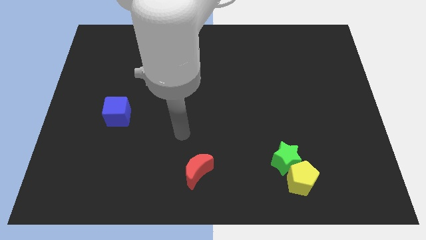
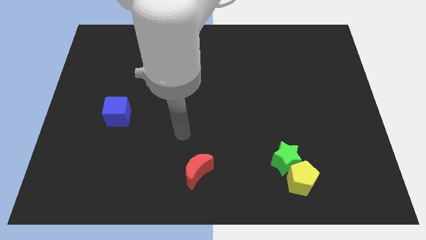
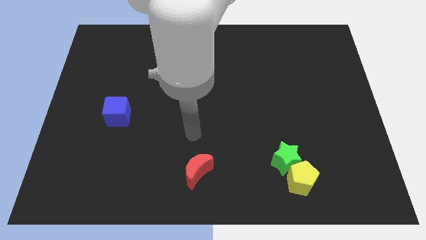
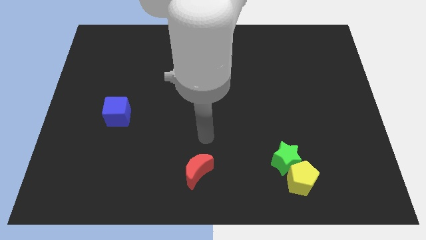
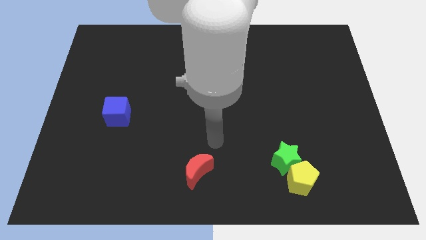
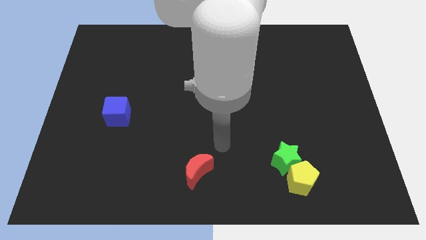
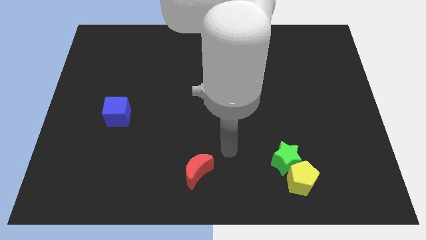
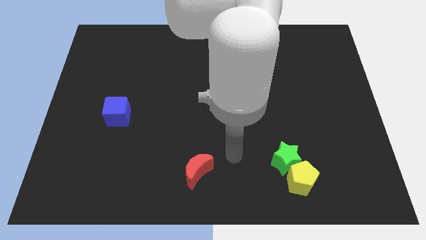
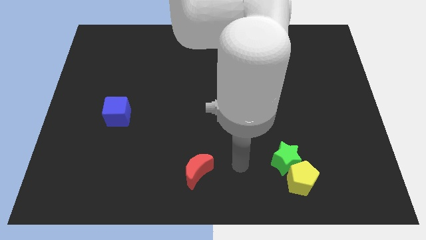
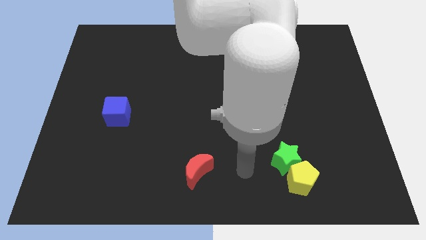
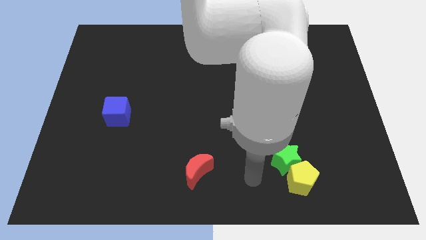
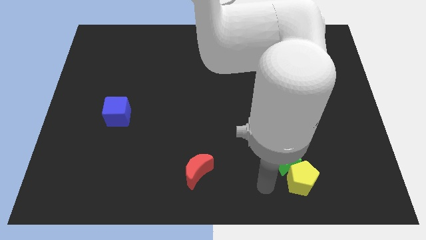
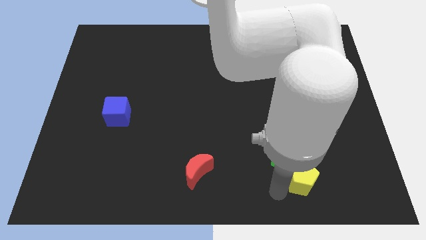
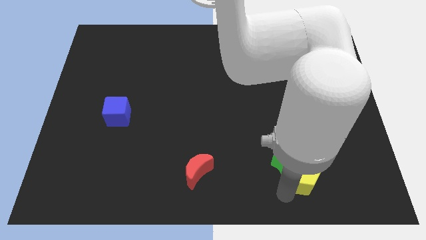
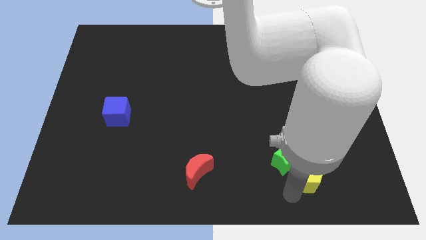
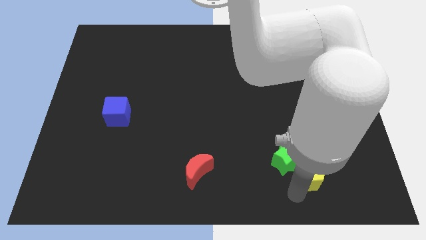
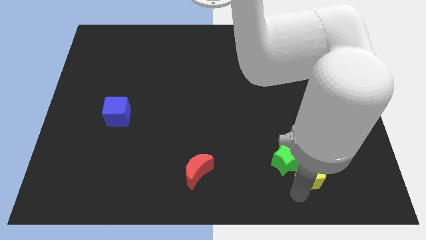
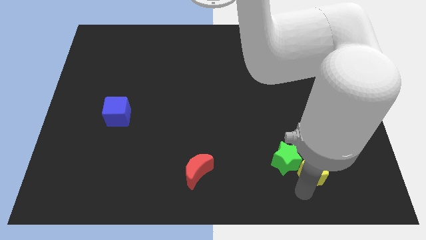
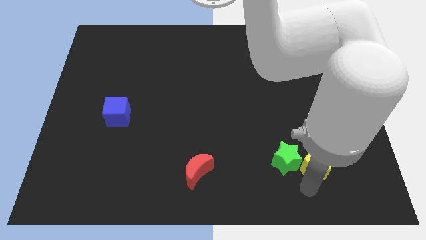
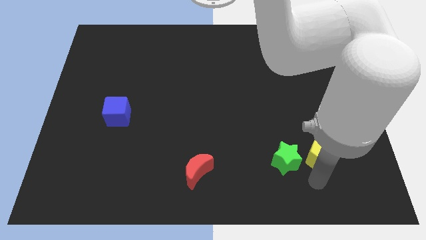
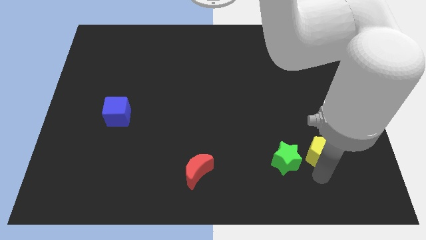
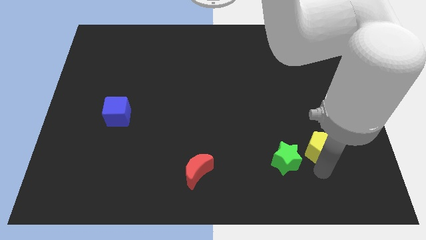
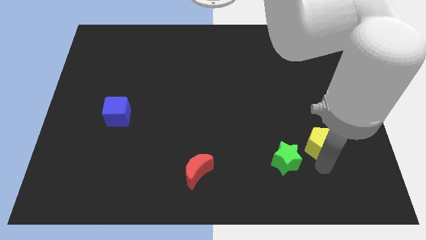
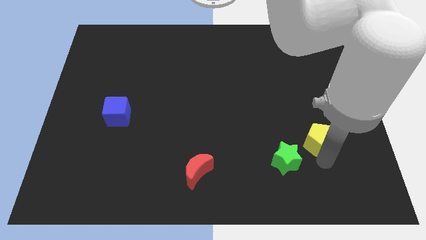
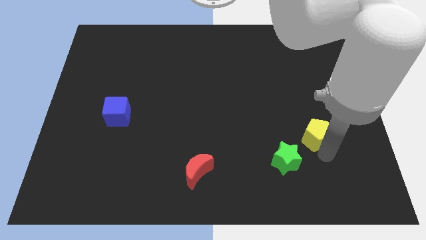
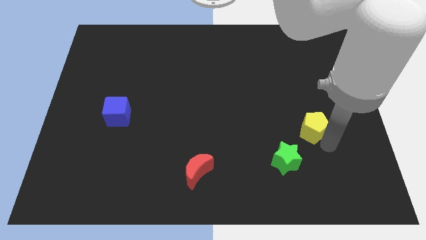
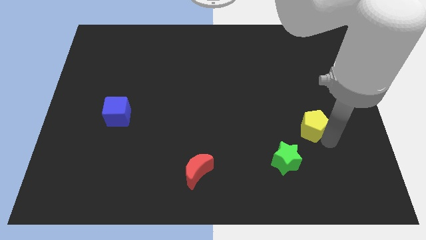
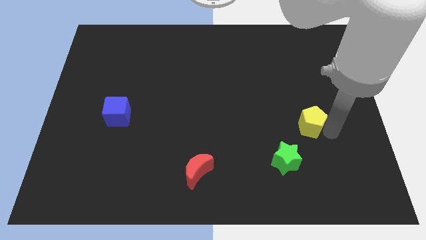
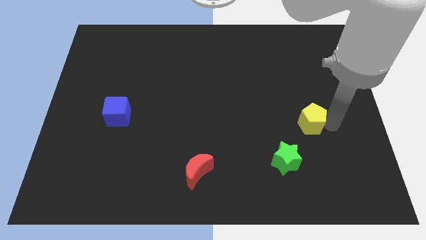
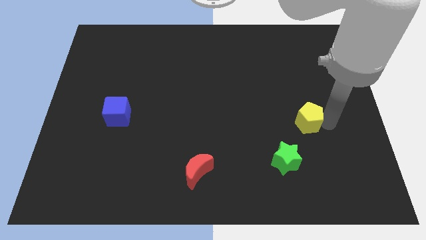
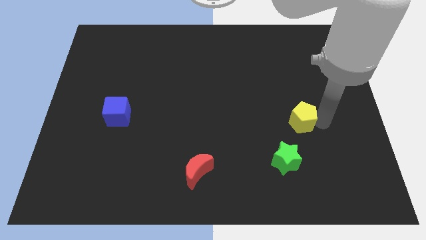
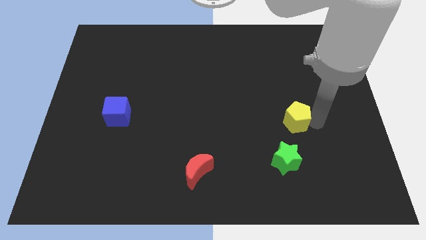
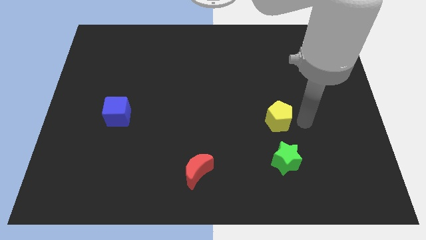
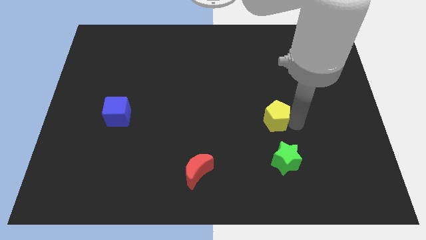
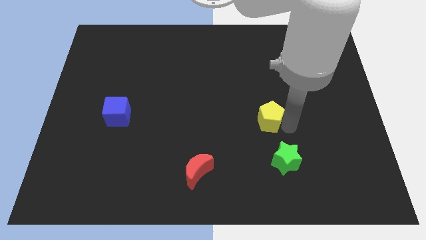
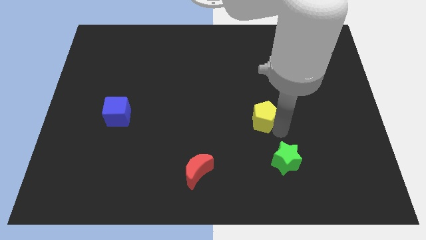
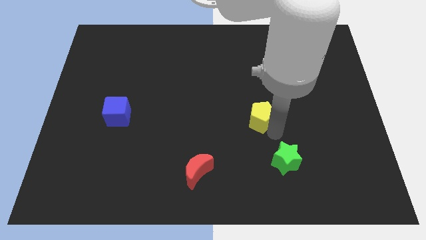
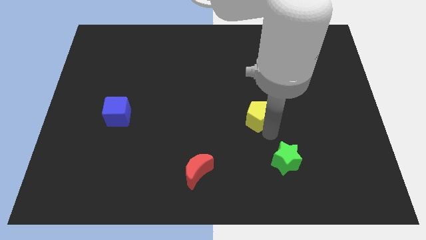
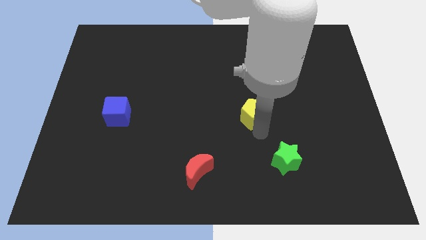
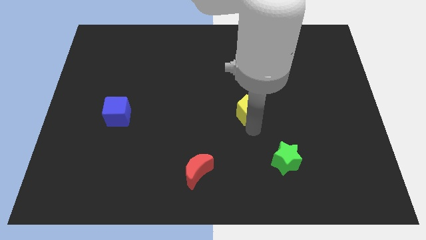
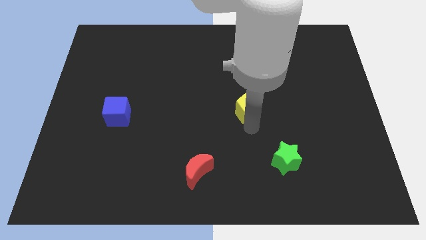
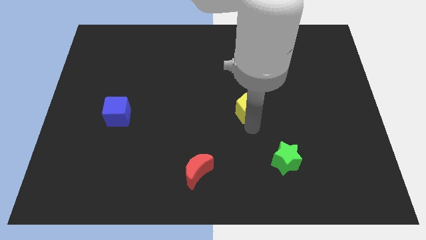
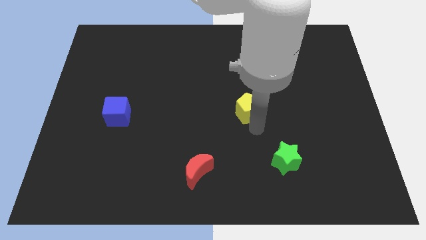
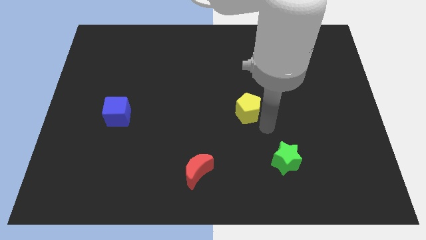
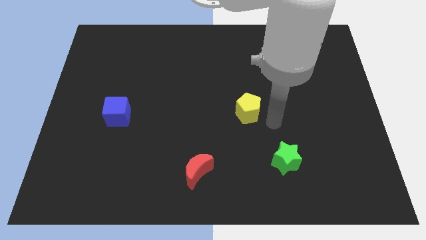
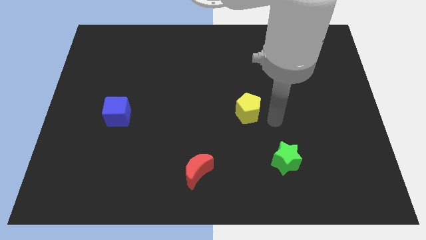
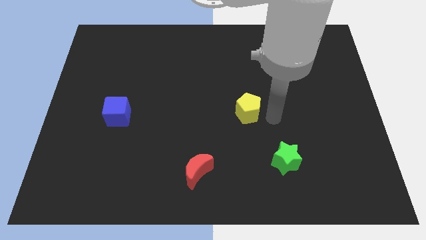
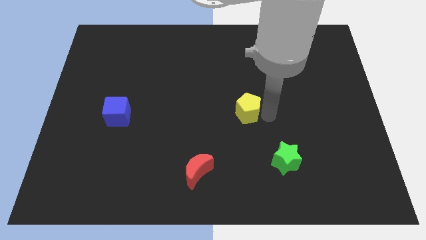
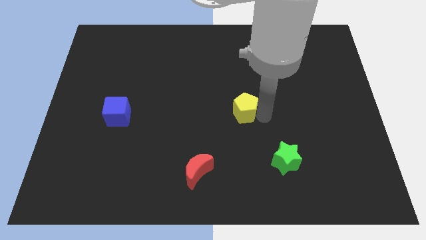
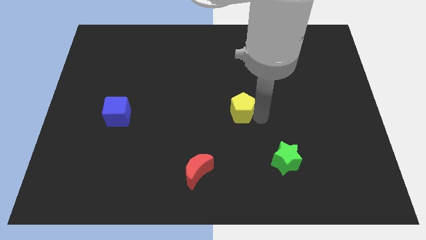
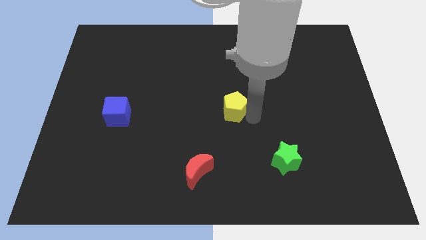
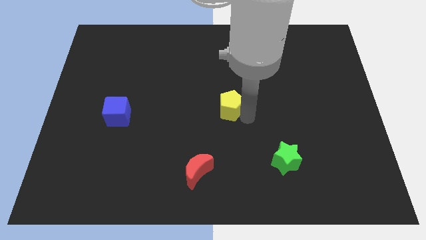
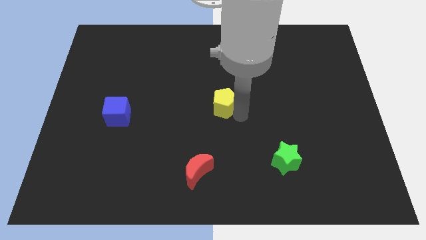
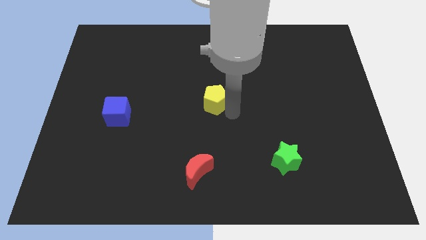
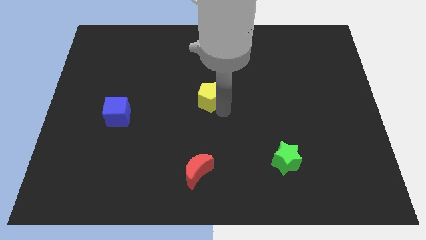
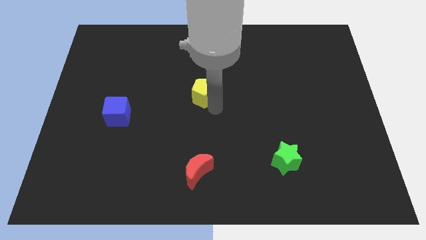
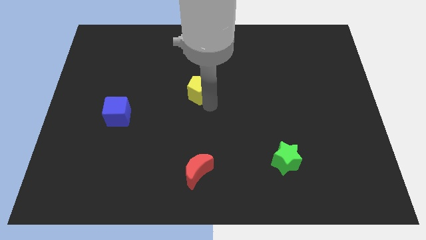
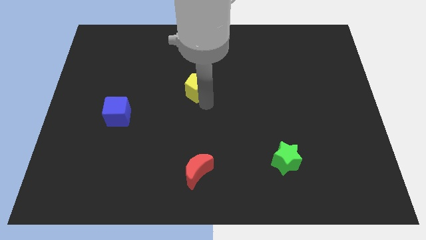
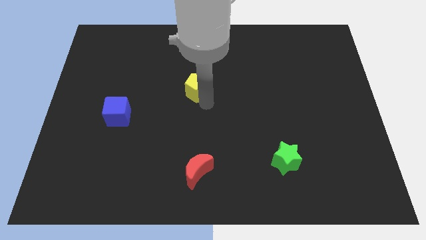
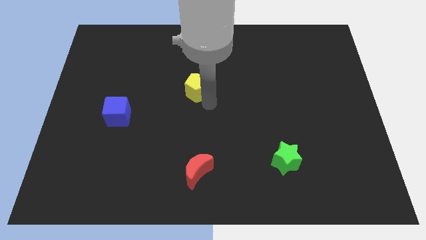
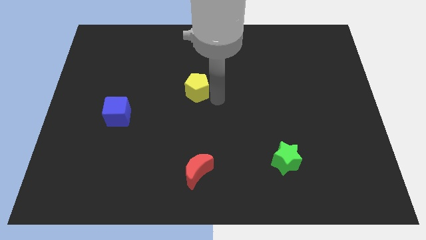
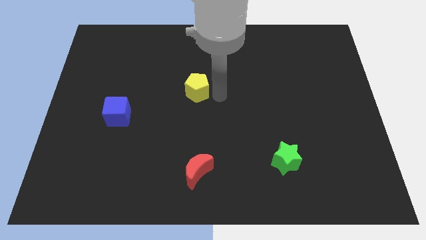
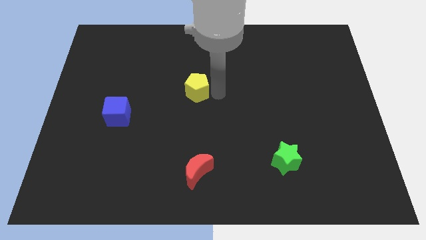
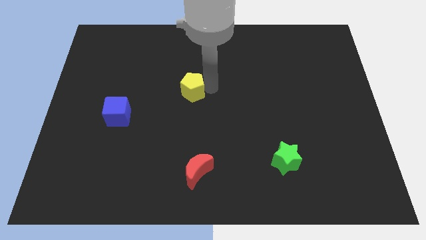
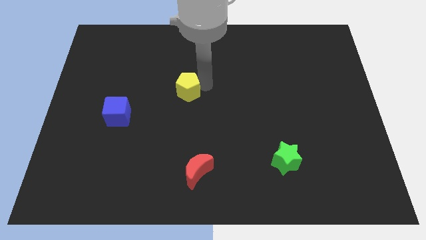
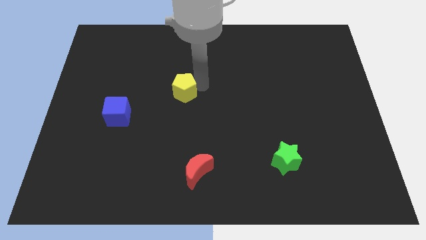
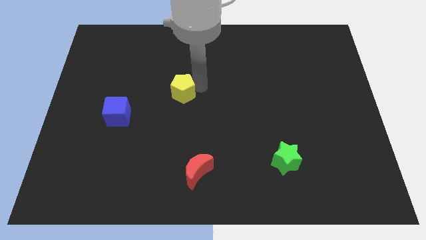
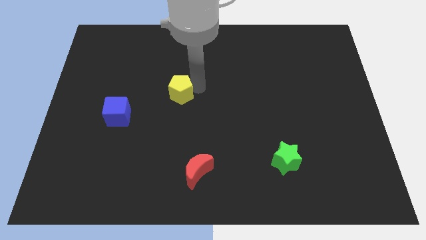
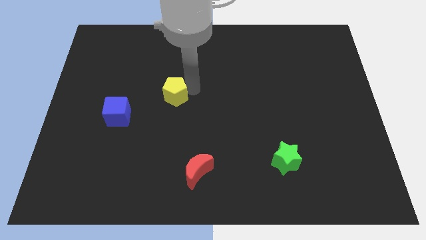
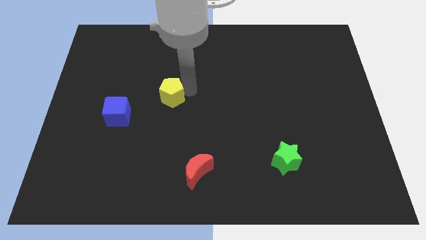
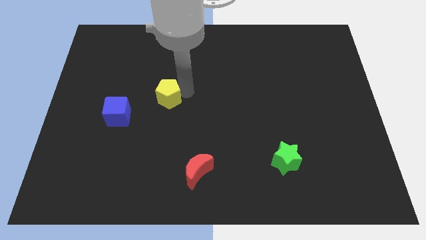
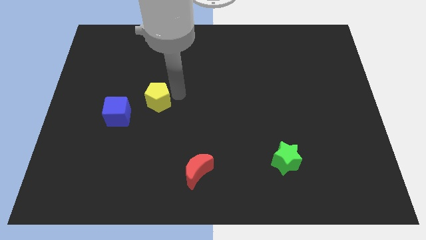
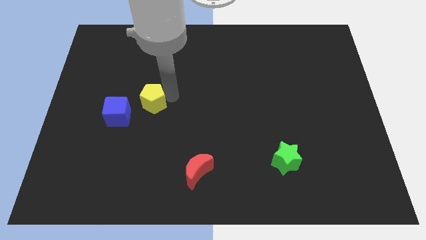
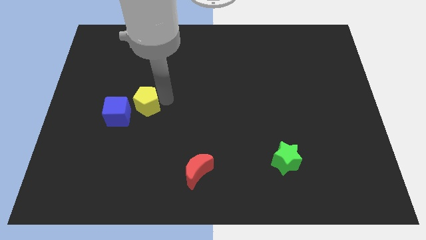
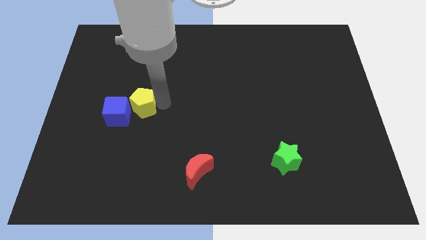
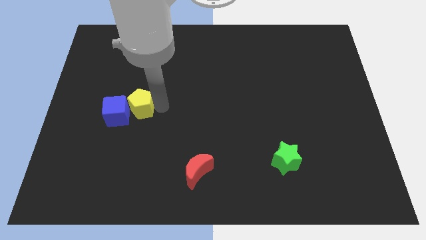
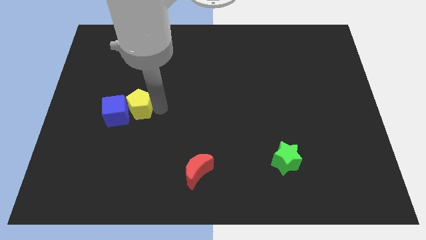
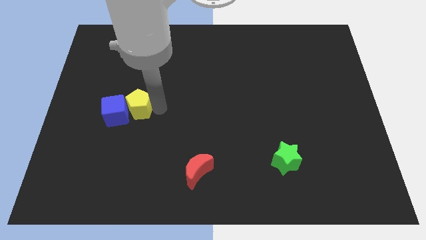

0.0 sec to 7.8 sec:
move the yellow pentagon towards the blue block

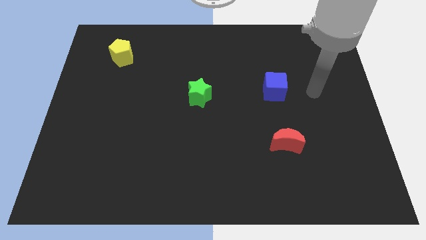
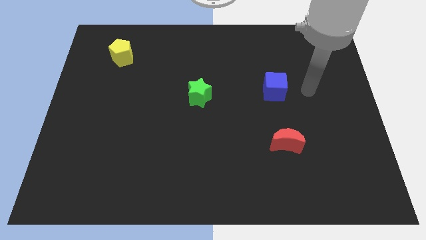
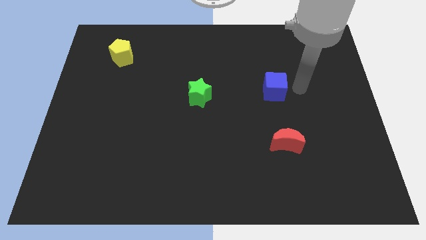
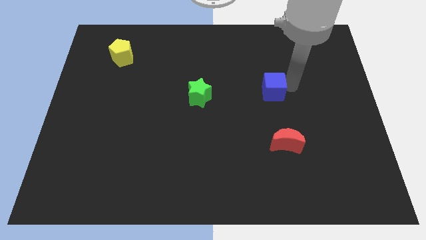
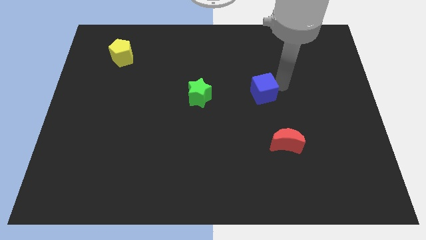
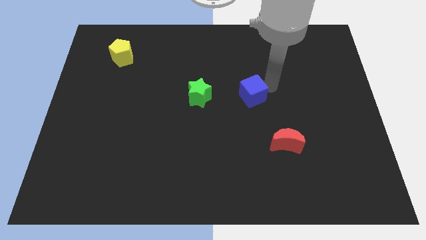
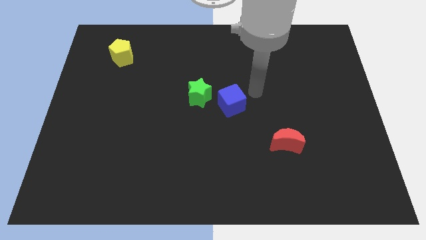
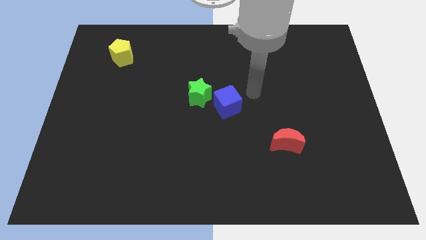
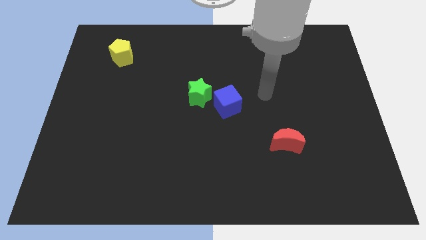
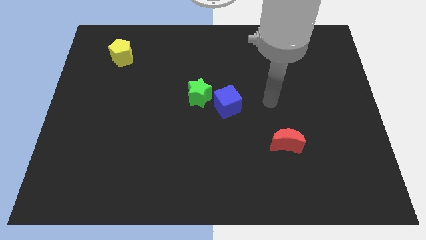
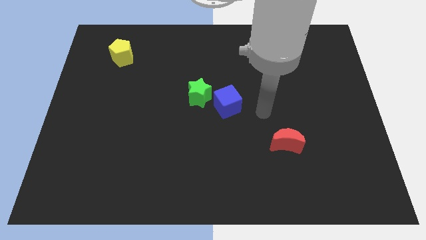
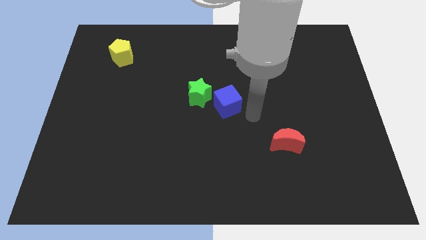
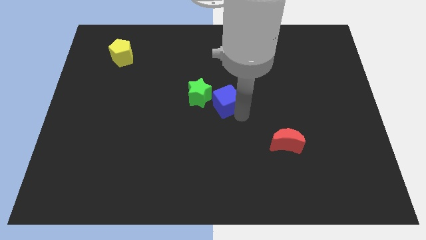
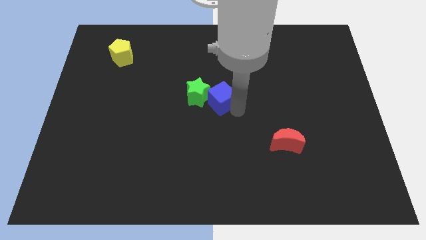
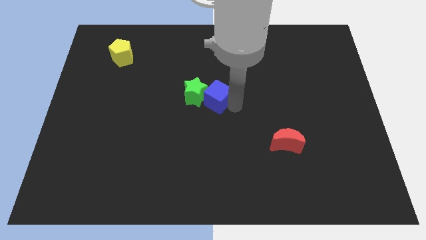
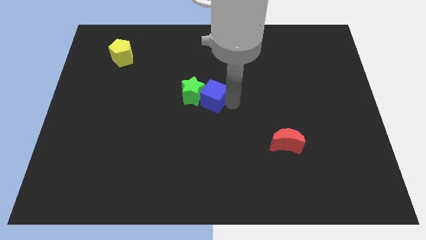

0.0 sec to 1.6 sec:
slide the blue cube close to the green block
